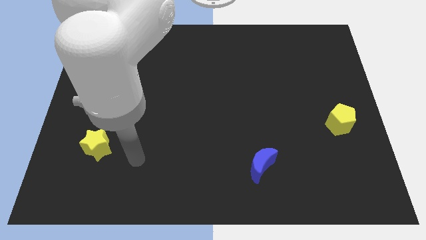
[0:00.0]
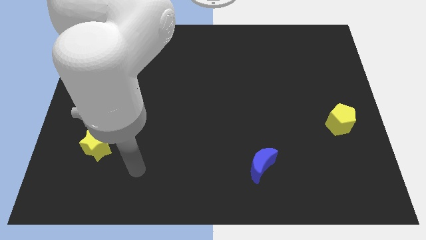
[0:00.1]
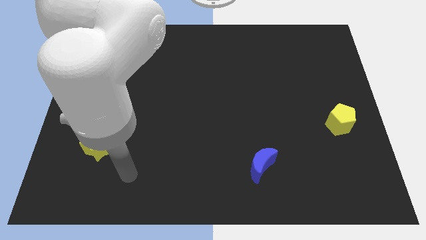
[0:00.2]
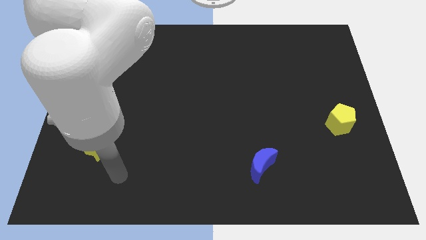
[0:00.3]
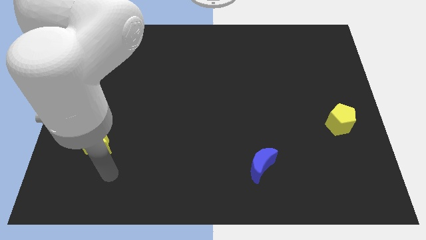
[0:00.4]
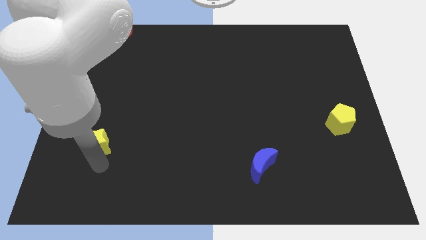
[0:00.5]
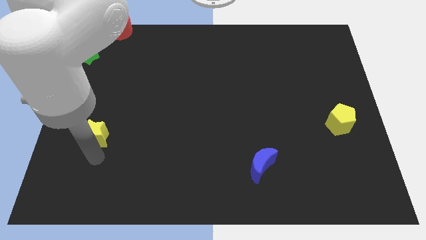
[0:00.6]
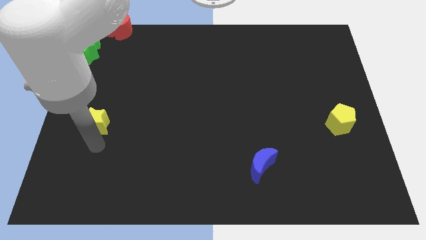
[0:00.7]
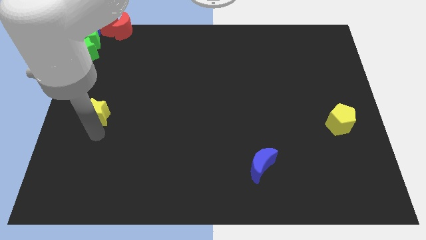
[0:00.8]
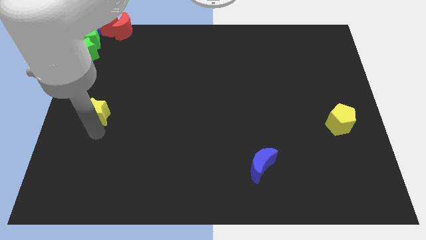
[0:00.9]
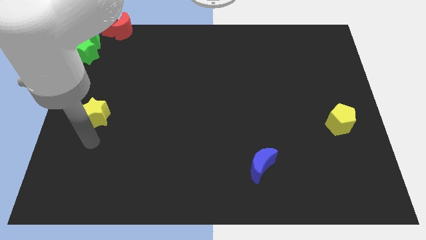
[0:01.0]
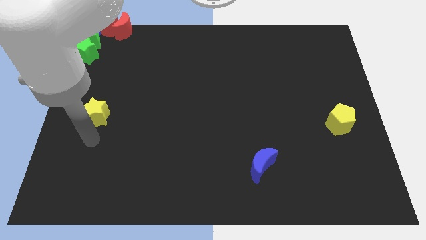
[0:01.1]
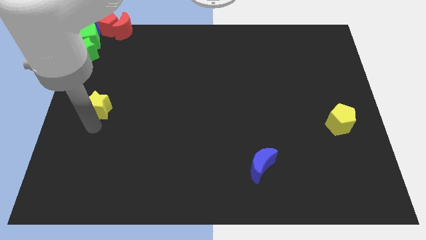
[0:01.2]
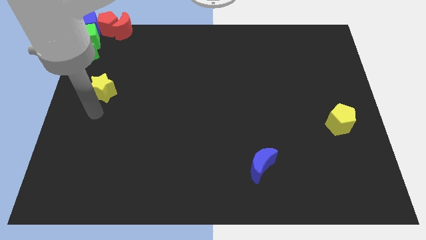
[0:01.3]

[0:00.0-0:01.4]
push the yellow star towards the top of the board

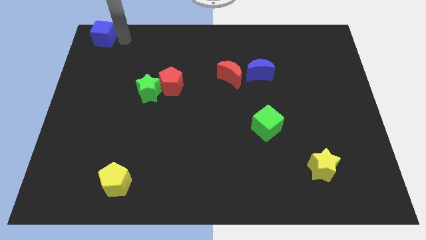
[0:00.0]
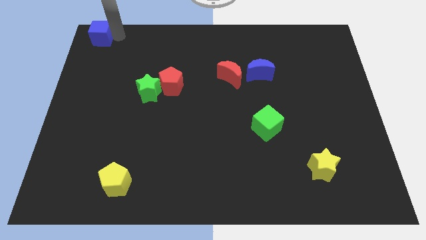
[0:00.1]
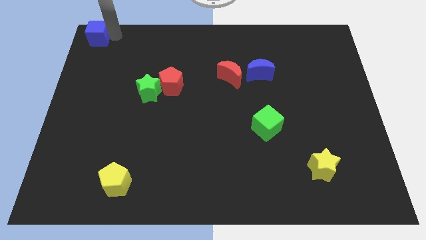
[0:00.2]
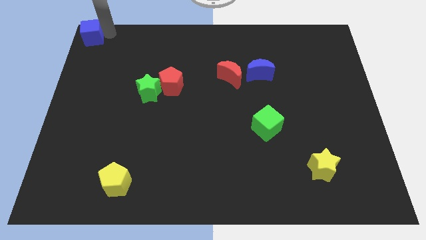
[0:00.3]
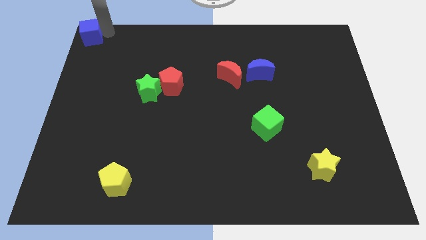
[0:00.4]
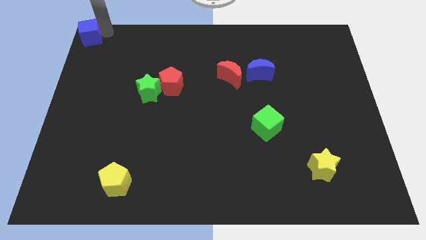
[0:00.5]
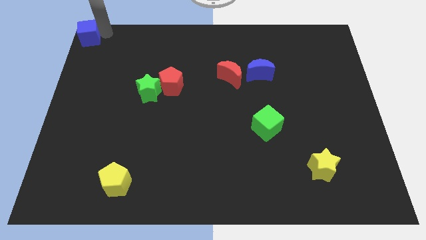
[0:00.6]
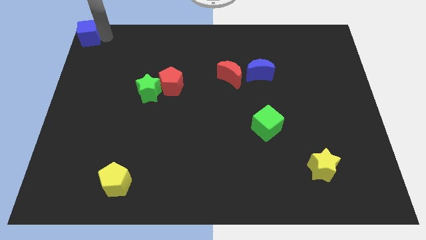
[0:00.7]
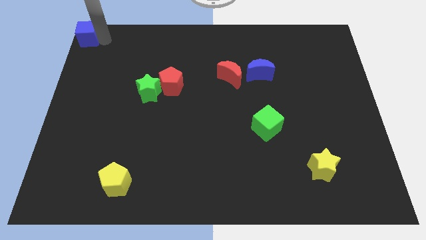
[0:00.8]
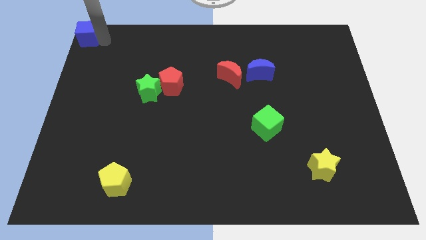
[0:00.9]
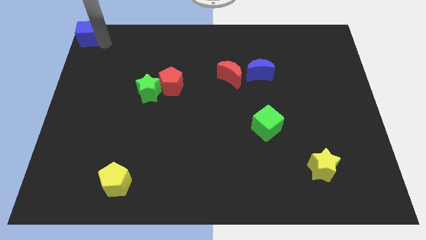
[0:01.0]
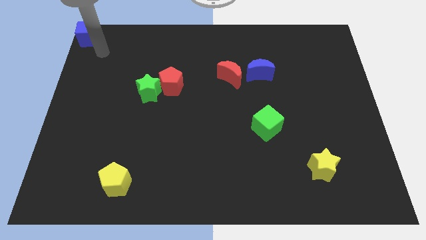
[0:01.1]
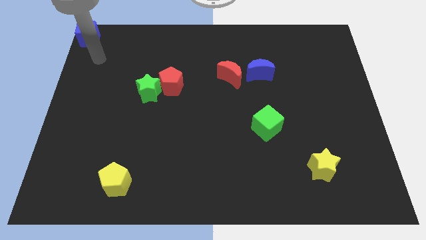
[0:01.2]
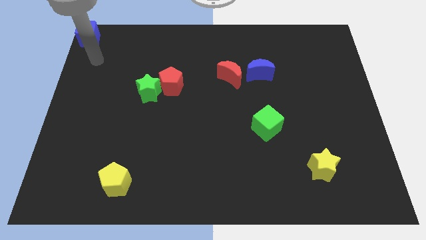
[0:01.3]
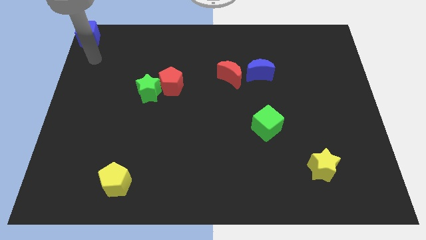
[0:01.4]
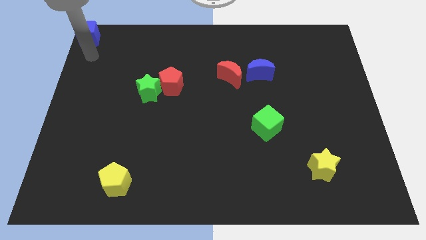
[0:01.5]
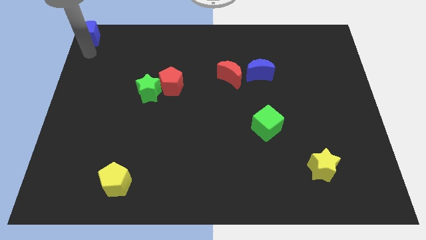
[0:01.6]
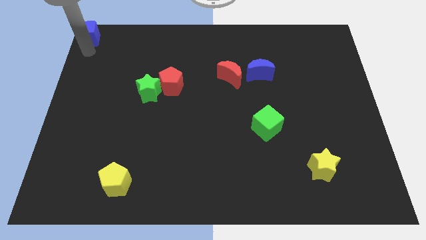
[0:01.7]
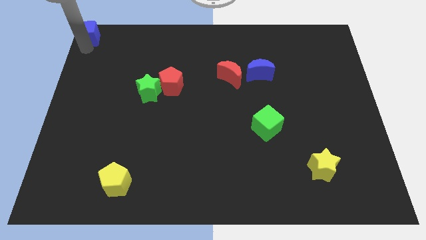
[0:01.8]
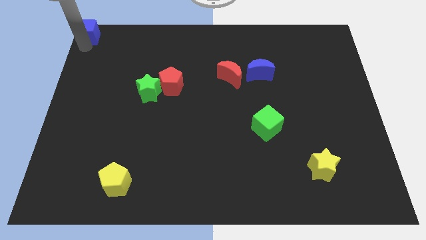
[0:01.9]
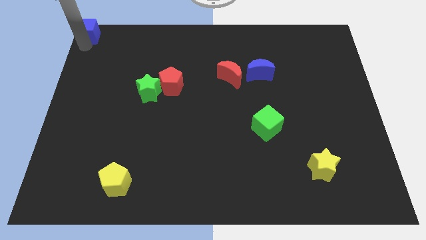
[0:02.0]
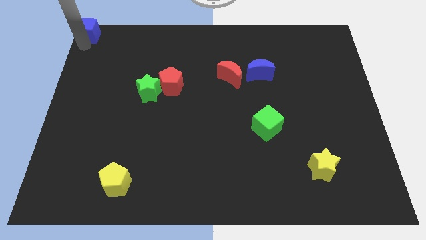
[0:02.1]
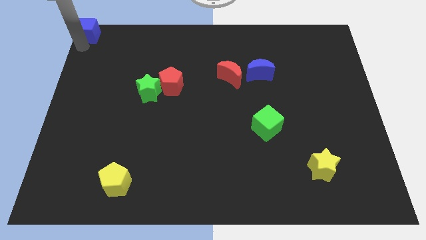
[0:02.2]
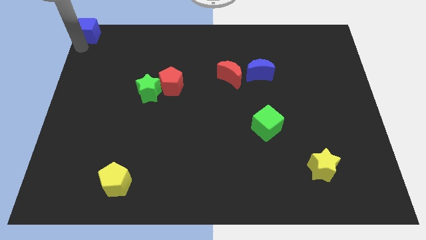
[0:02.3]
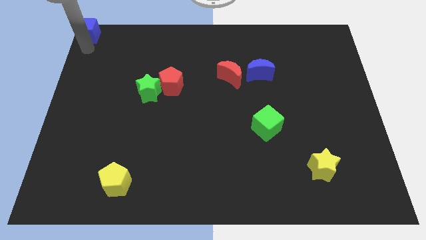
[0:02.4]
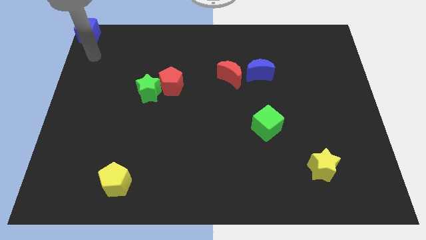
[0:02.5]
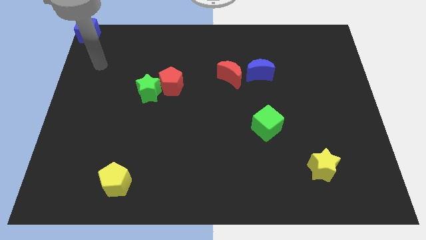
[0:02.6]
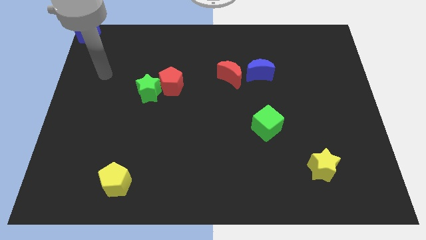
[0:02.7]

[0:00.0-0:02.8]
move the arm to the bottom side of the green star

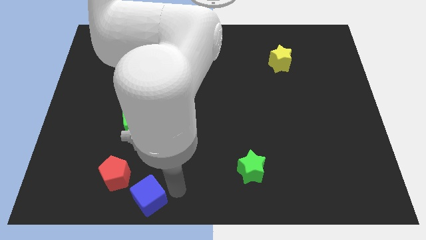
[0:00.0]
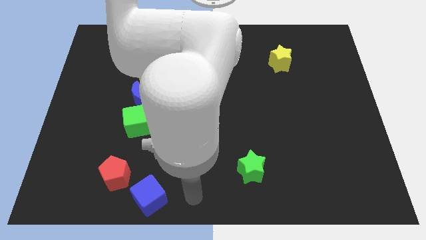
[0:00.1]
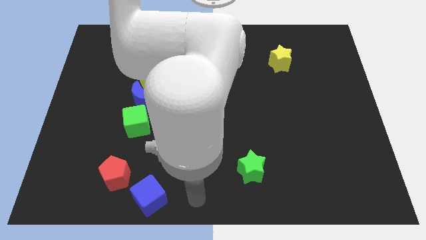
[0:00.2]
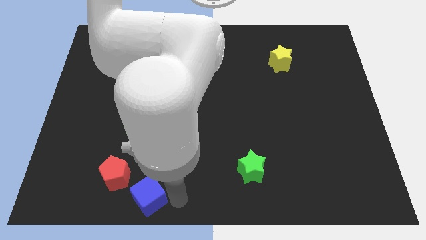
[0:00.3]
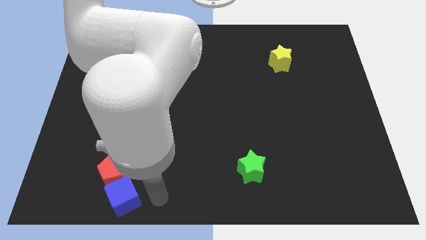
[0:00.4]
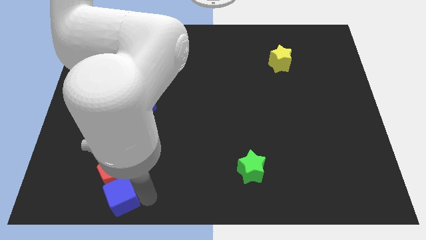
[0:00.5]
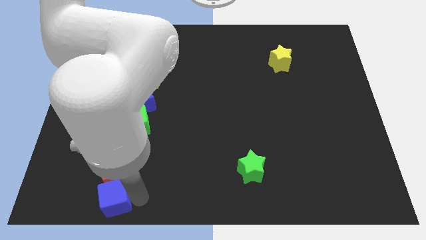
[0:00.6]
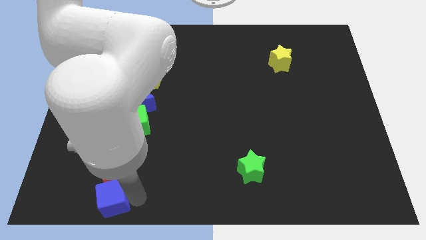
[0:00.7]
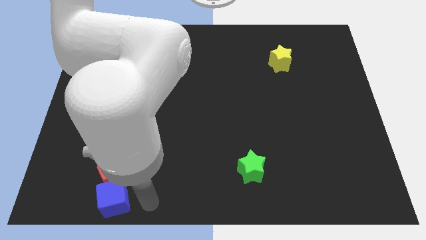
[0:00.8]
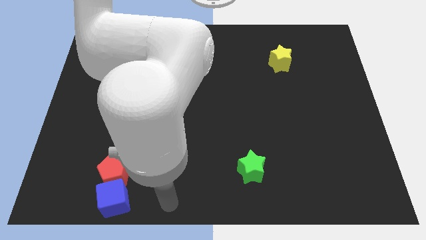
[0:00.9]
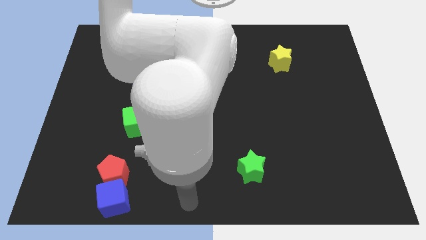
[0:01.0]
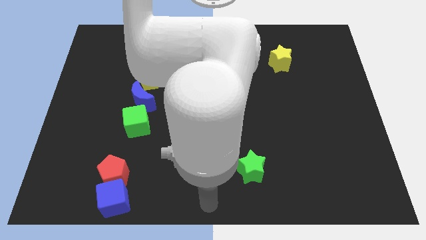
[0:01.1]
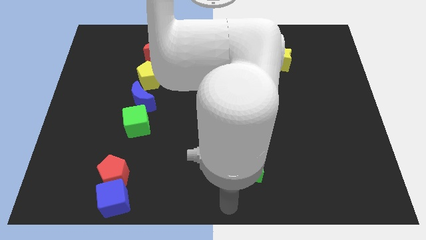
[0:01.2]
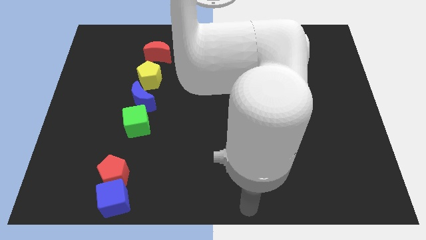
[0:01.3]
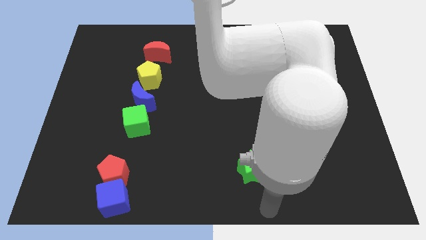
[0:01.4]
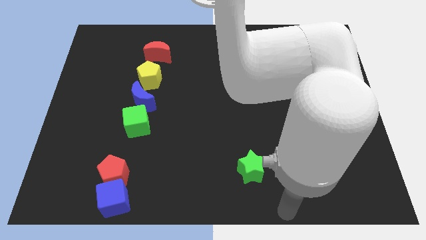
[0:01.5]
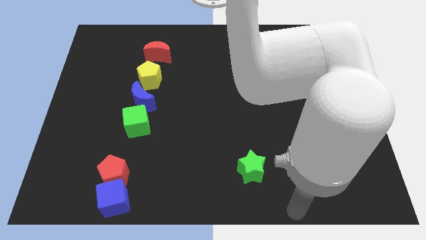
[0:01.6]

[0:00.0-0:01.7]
push the blue cube to the bottom of the red pentagon

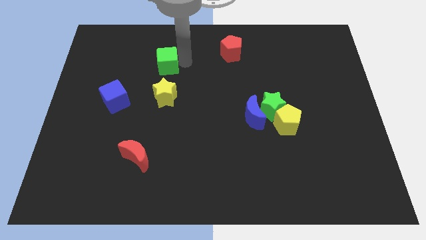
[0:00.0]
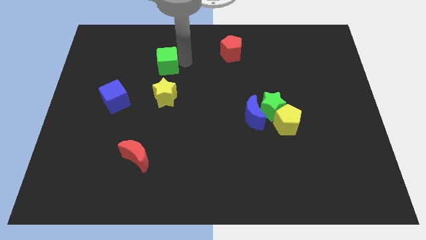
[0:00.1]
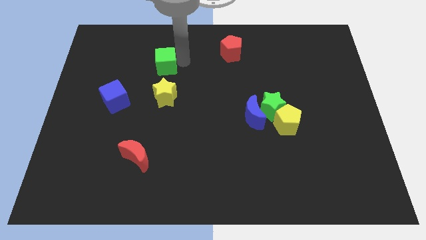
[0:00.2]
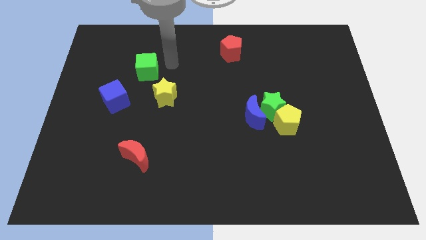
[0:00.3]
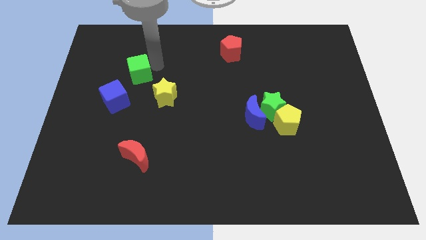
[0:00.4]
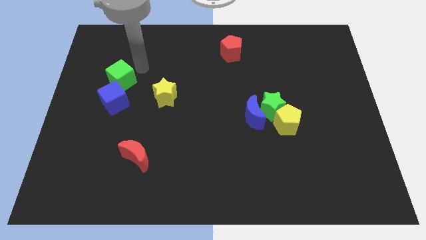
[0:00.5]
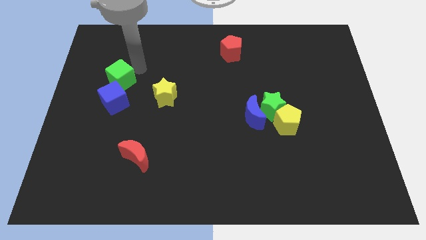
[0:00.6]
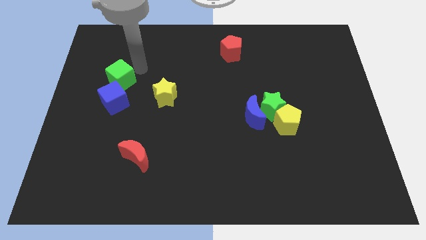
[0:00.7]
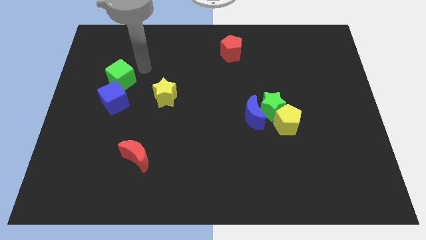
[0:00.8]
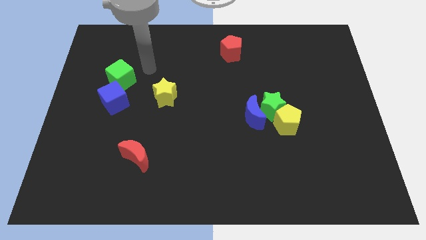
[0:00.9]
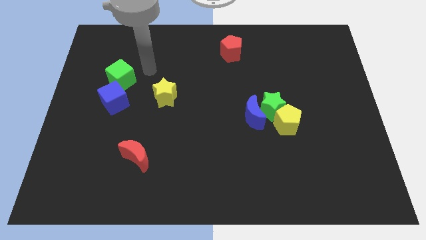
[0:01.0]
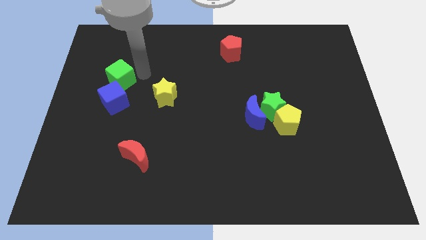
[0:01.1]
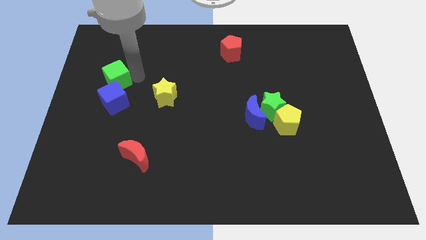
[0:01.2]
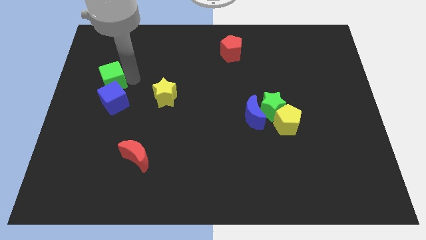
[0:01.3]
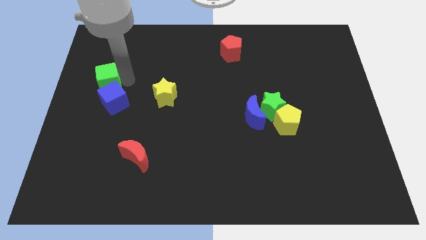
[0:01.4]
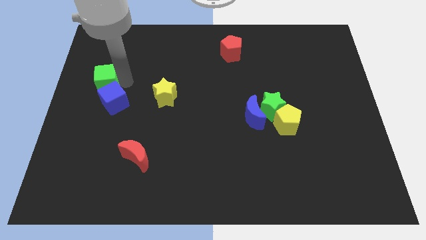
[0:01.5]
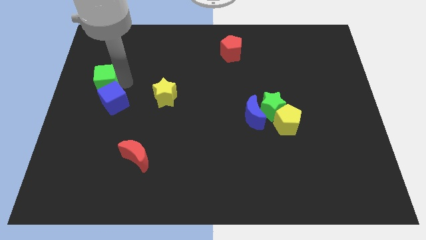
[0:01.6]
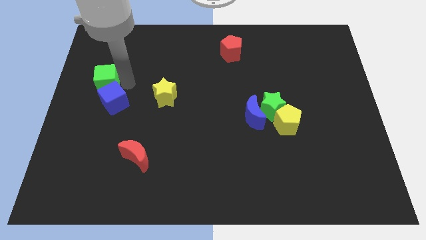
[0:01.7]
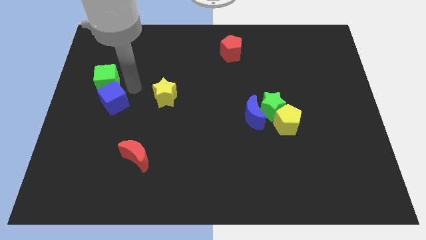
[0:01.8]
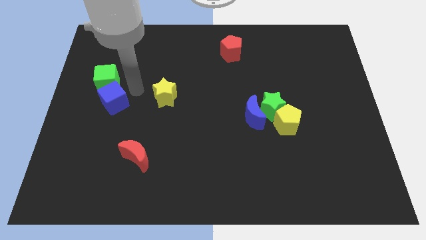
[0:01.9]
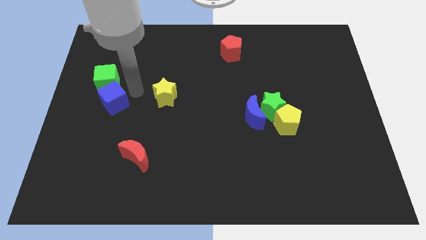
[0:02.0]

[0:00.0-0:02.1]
place the green cube on top of the blue cube

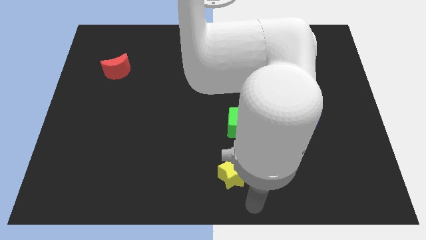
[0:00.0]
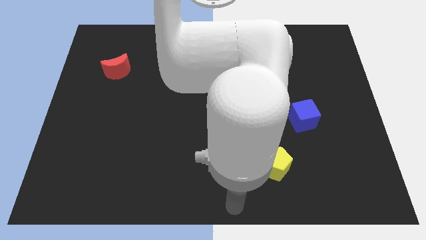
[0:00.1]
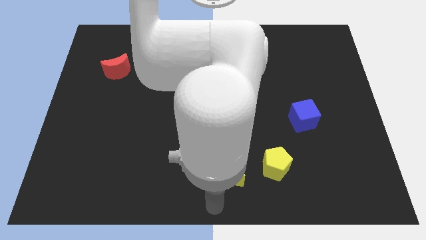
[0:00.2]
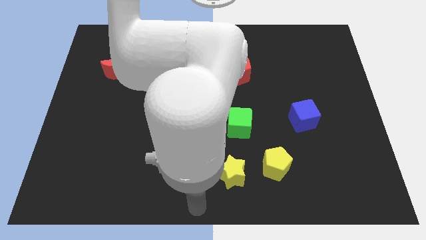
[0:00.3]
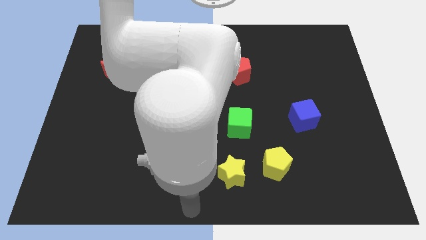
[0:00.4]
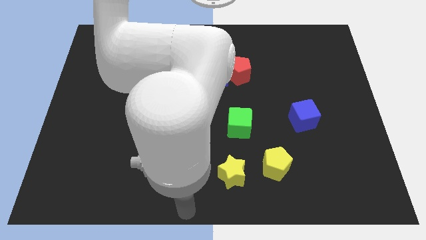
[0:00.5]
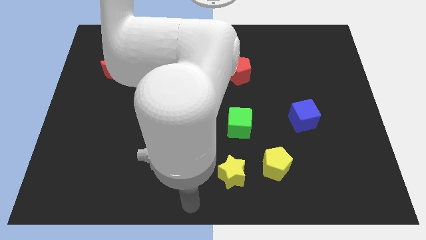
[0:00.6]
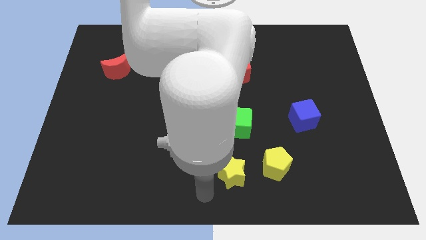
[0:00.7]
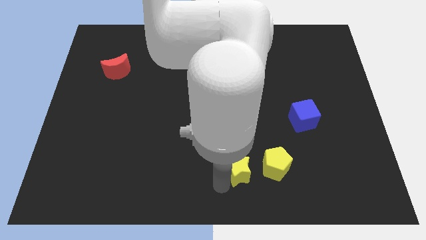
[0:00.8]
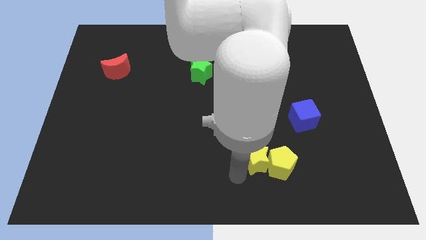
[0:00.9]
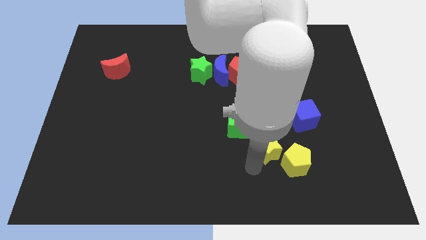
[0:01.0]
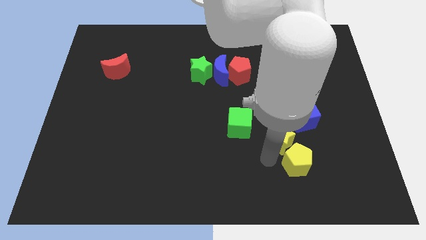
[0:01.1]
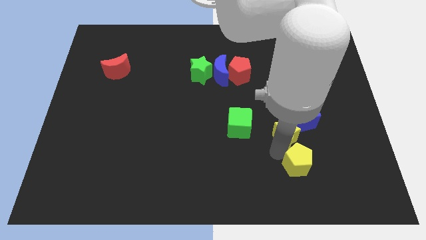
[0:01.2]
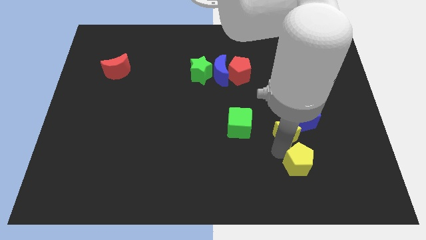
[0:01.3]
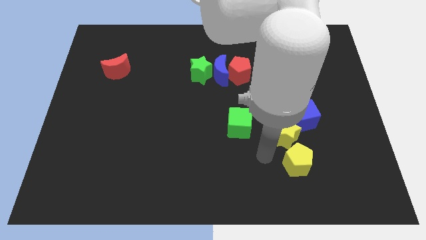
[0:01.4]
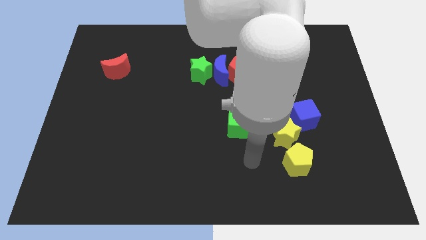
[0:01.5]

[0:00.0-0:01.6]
push the yellow star diagonal bottom right to the blue cube
